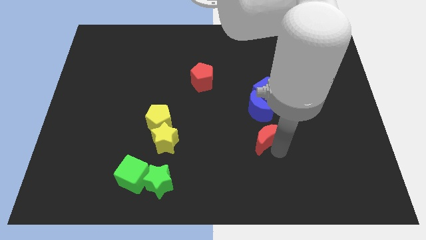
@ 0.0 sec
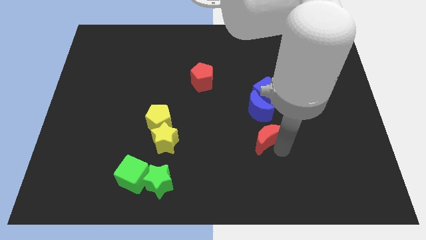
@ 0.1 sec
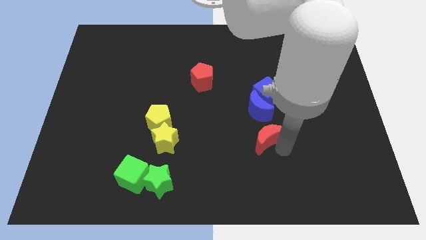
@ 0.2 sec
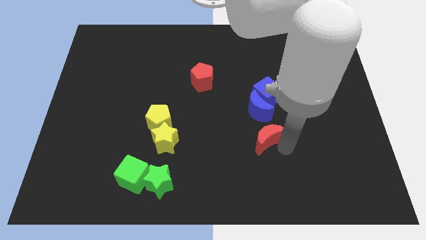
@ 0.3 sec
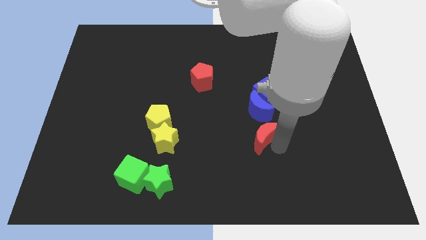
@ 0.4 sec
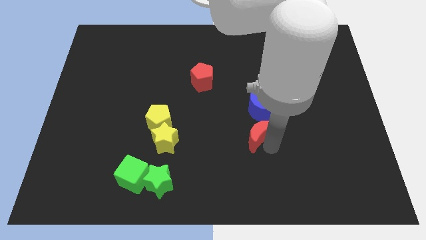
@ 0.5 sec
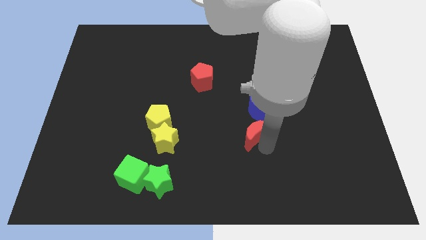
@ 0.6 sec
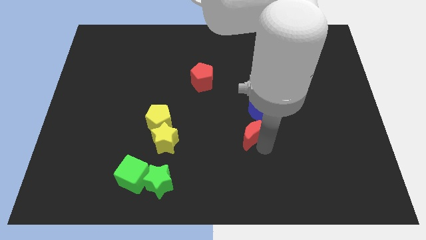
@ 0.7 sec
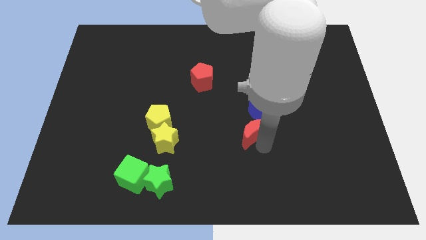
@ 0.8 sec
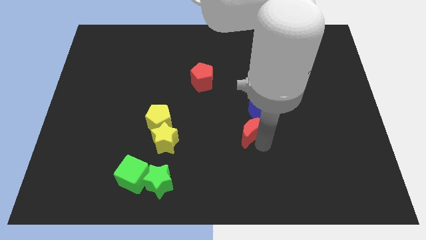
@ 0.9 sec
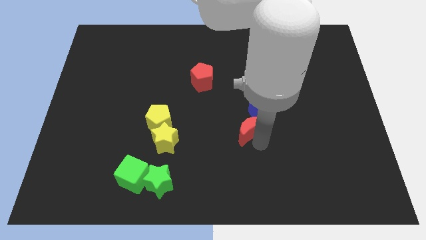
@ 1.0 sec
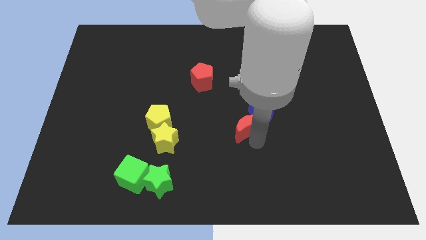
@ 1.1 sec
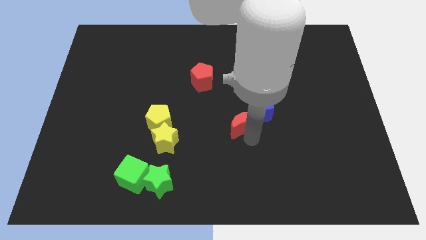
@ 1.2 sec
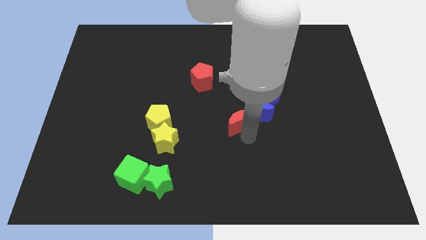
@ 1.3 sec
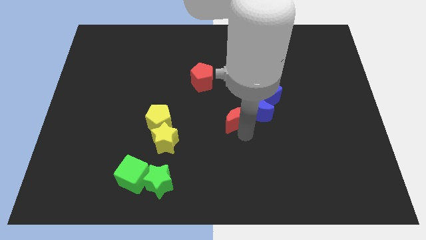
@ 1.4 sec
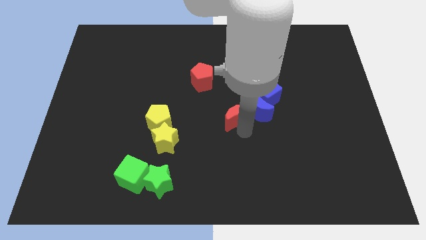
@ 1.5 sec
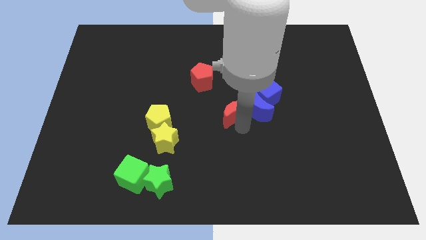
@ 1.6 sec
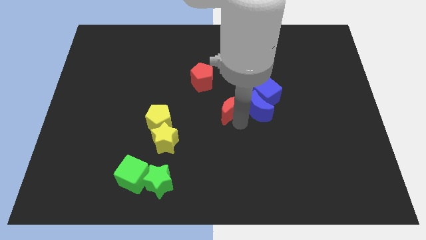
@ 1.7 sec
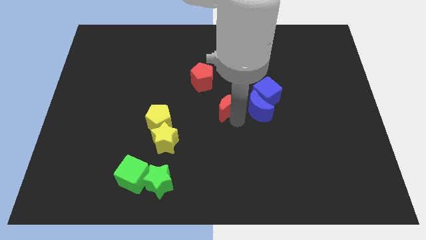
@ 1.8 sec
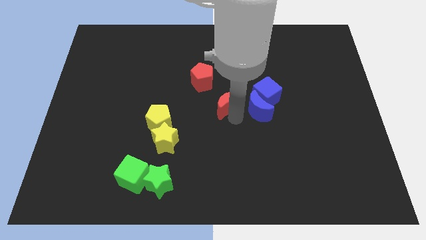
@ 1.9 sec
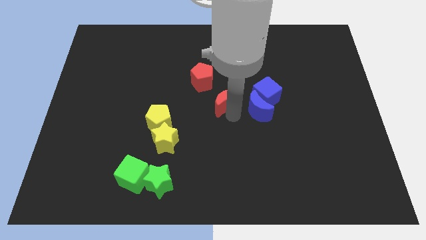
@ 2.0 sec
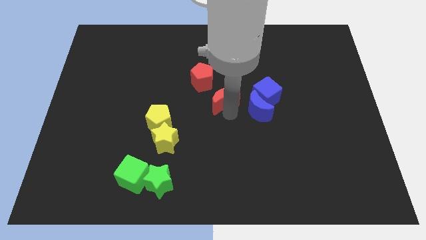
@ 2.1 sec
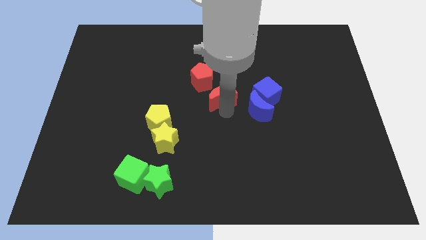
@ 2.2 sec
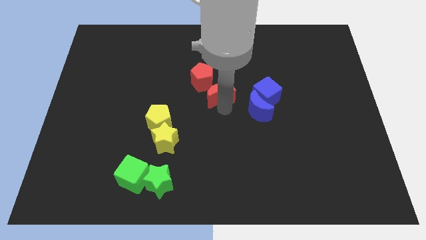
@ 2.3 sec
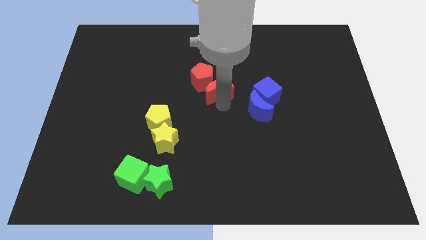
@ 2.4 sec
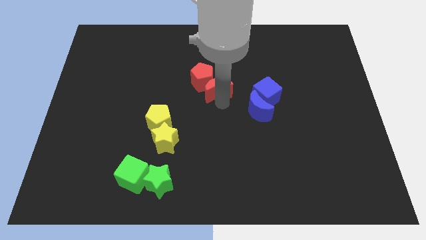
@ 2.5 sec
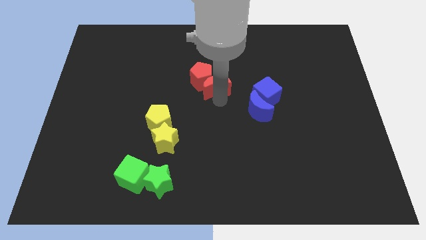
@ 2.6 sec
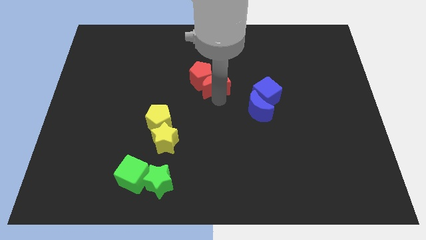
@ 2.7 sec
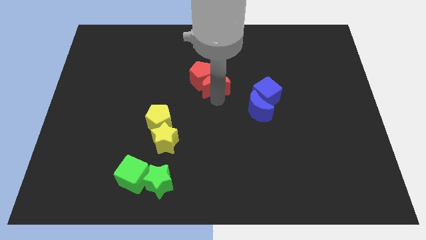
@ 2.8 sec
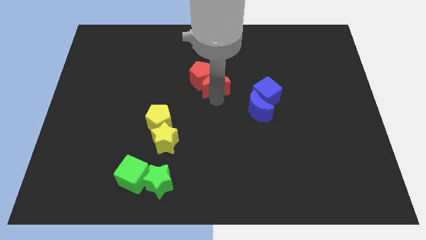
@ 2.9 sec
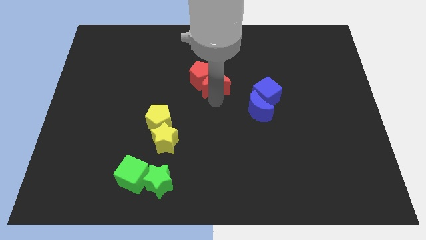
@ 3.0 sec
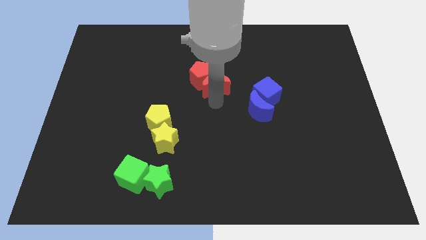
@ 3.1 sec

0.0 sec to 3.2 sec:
place the red crescent into the red pentagon

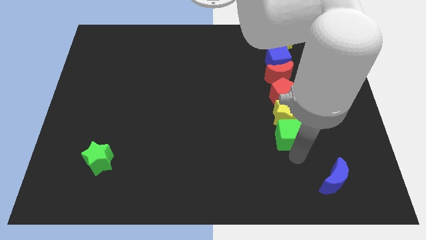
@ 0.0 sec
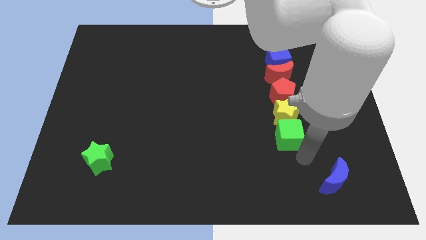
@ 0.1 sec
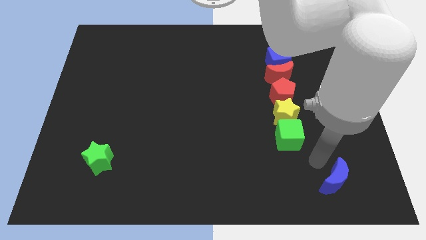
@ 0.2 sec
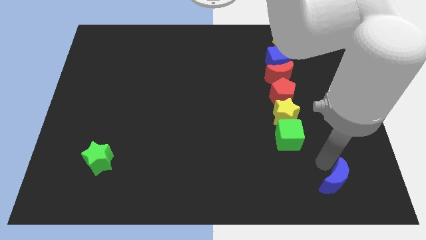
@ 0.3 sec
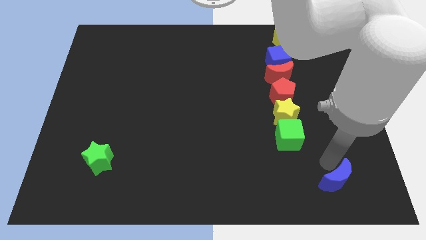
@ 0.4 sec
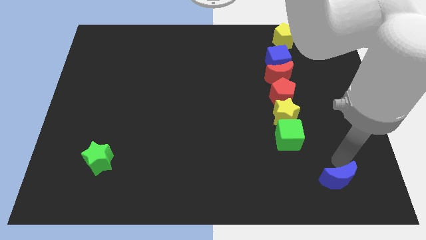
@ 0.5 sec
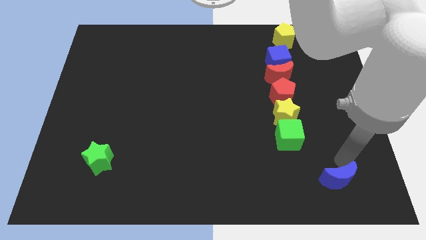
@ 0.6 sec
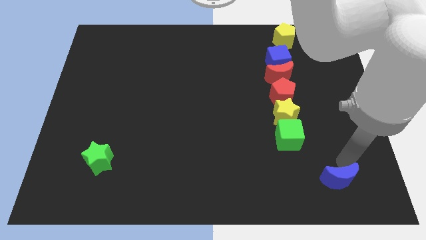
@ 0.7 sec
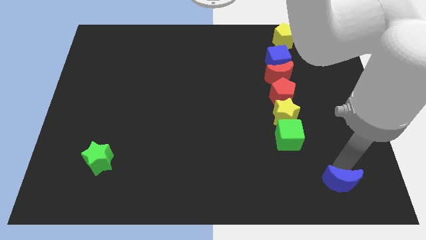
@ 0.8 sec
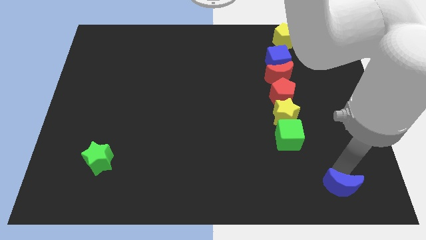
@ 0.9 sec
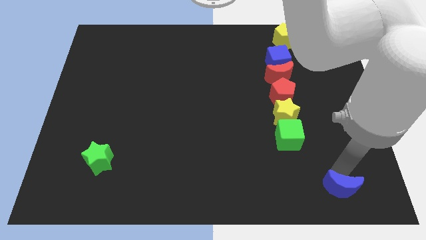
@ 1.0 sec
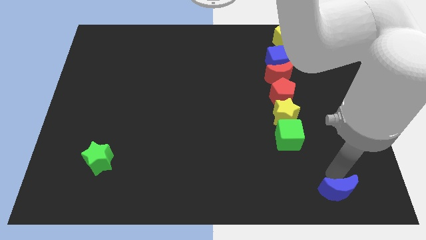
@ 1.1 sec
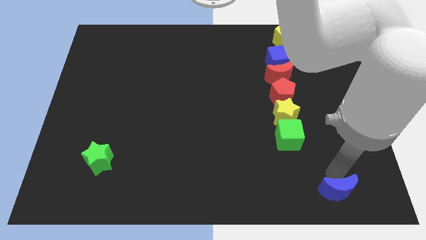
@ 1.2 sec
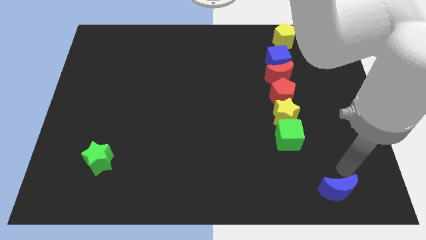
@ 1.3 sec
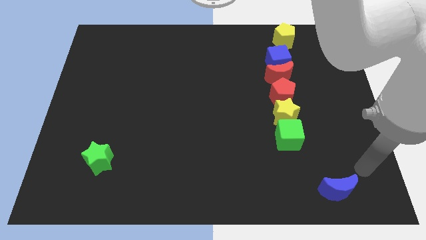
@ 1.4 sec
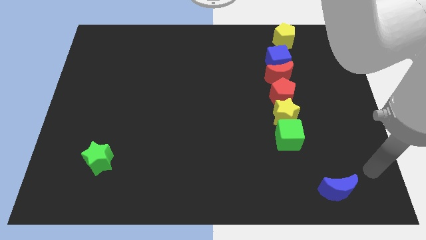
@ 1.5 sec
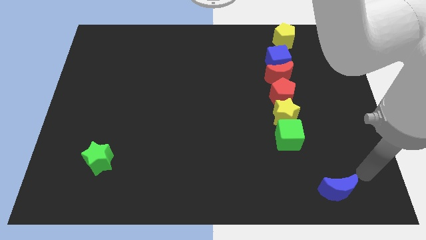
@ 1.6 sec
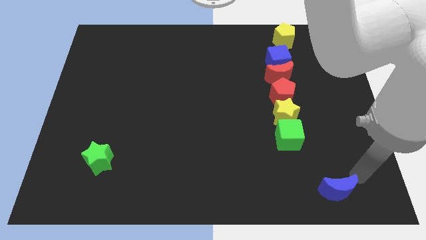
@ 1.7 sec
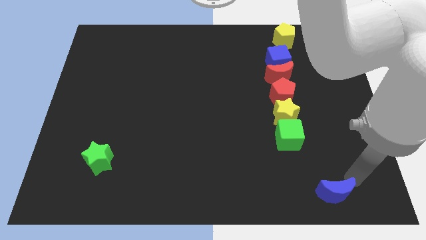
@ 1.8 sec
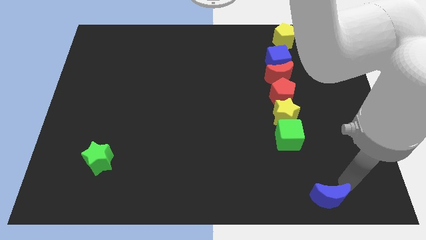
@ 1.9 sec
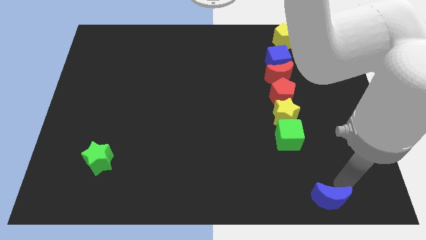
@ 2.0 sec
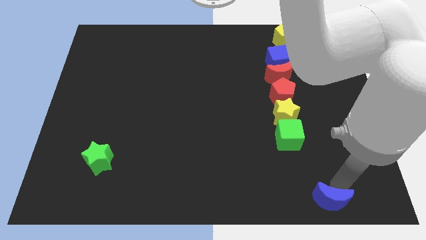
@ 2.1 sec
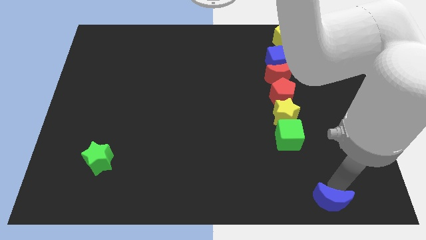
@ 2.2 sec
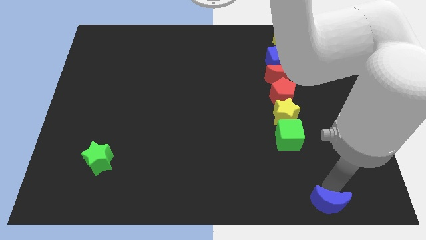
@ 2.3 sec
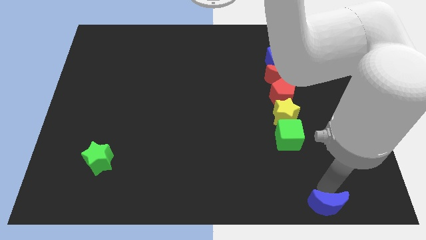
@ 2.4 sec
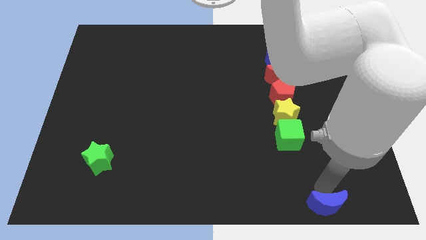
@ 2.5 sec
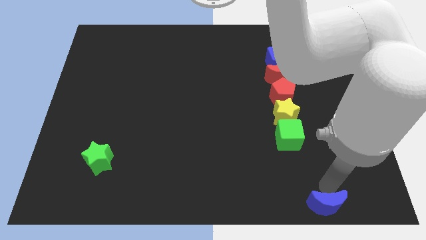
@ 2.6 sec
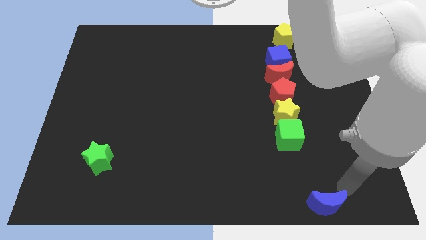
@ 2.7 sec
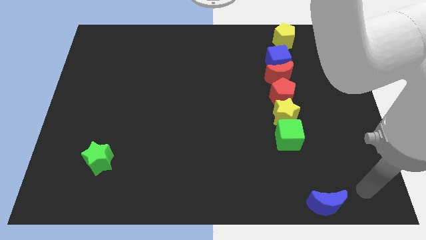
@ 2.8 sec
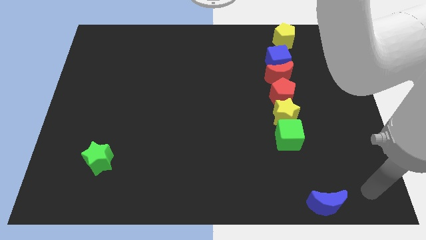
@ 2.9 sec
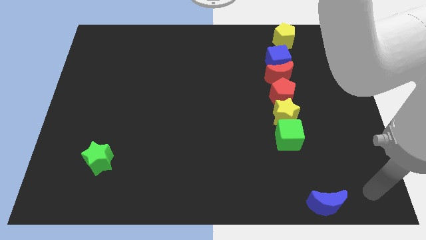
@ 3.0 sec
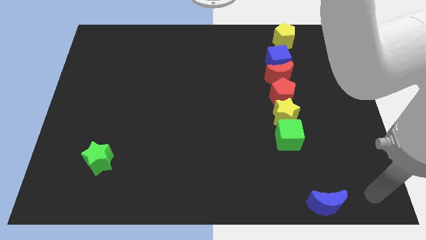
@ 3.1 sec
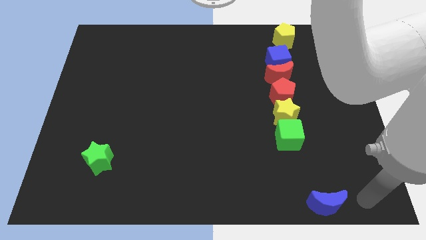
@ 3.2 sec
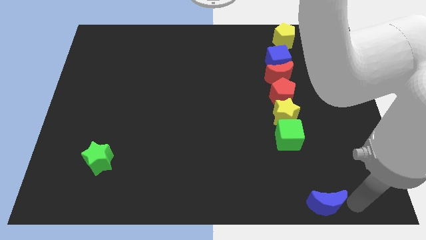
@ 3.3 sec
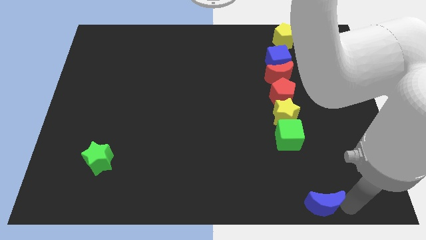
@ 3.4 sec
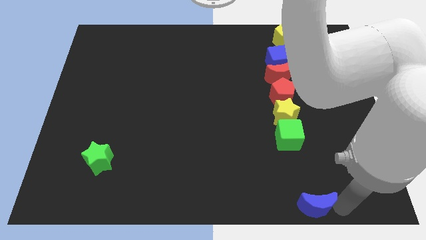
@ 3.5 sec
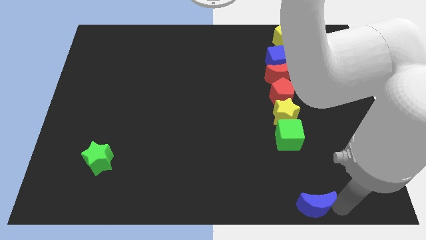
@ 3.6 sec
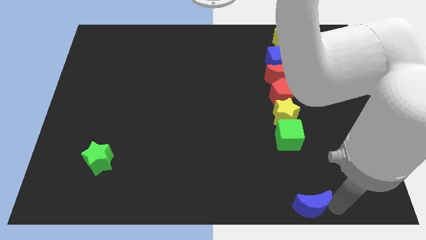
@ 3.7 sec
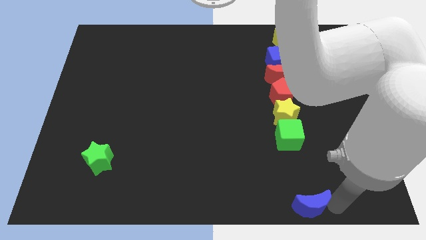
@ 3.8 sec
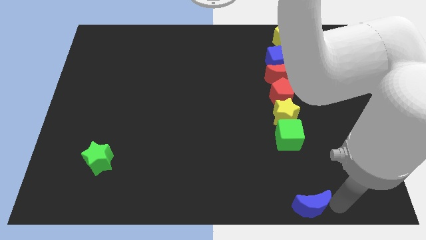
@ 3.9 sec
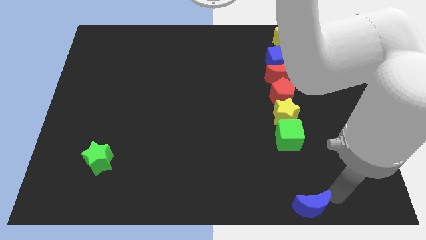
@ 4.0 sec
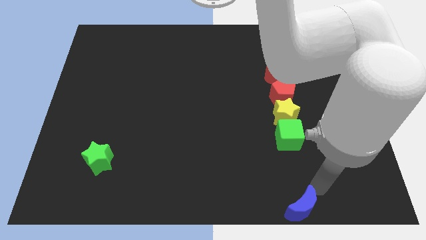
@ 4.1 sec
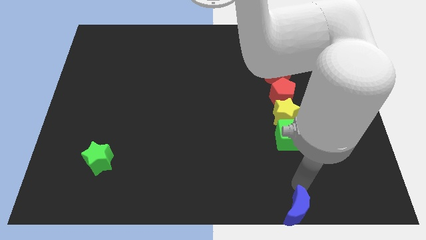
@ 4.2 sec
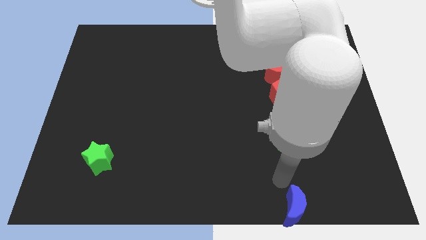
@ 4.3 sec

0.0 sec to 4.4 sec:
place the blue moon below the green cube

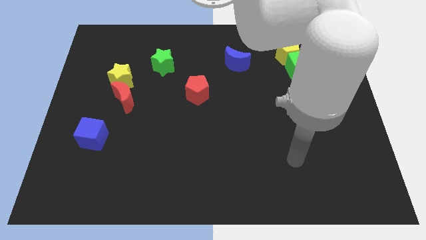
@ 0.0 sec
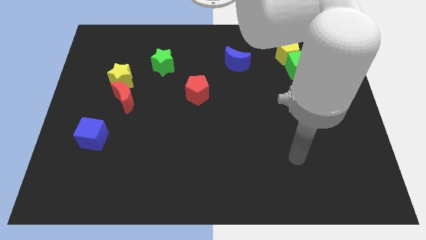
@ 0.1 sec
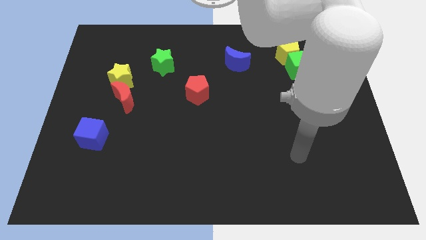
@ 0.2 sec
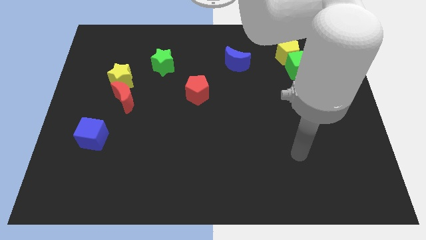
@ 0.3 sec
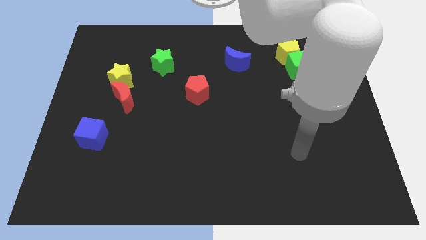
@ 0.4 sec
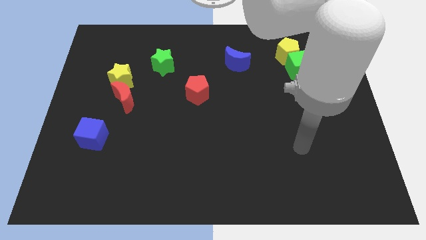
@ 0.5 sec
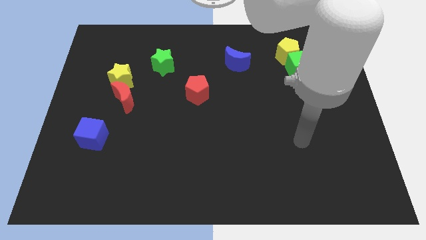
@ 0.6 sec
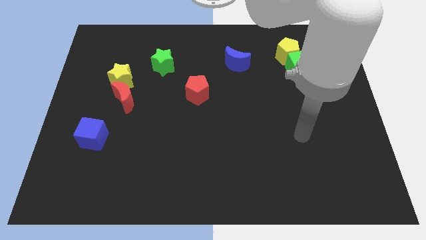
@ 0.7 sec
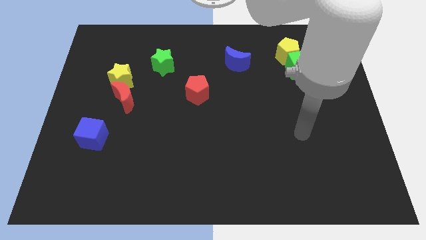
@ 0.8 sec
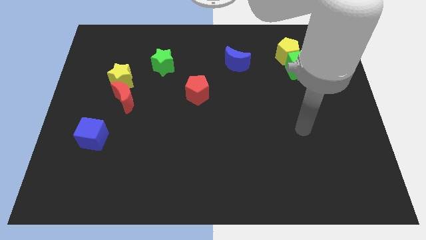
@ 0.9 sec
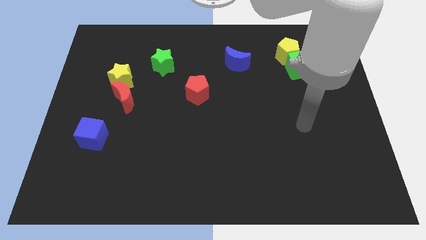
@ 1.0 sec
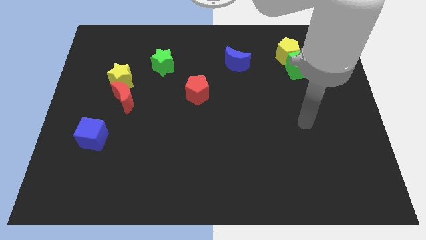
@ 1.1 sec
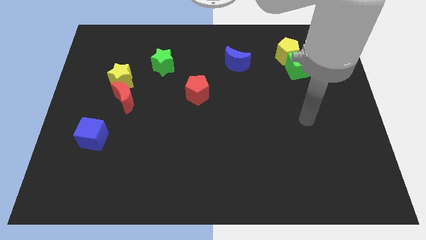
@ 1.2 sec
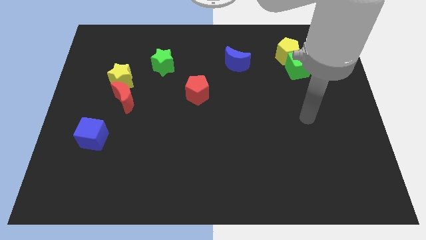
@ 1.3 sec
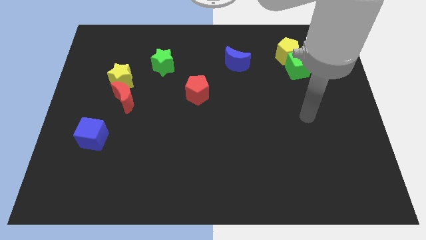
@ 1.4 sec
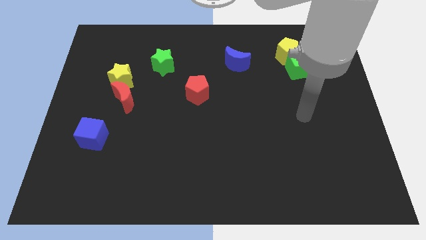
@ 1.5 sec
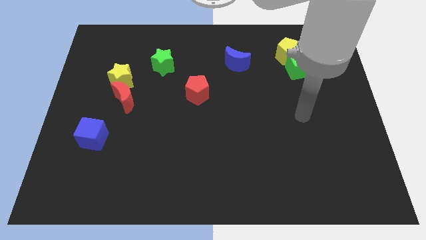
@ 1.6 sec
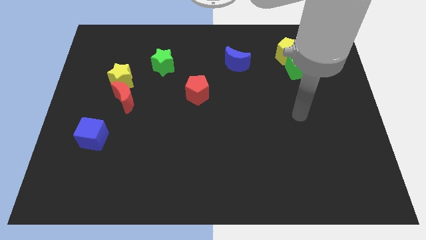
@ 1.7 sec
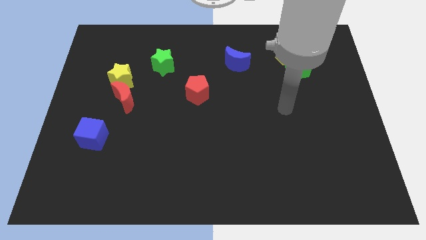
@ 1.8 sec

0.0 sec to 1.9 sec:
move the arm towards the top side of the board
